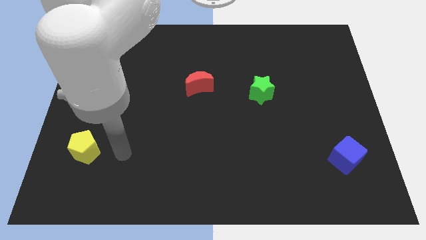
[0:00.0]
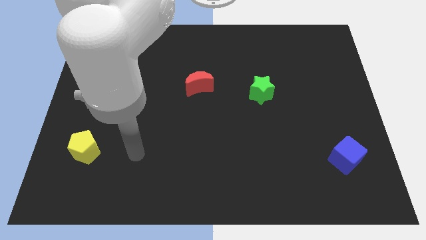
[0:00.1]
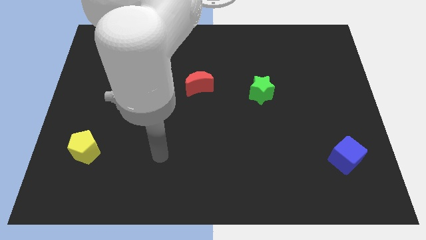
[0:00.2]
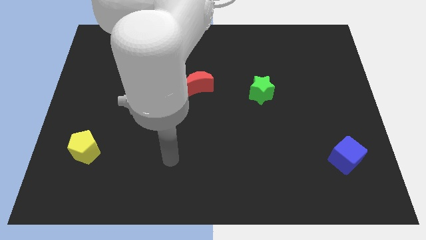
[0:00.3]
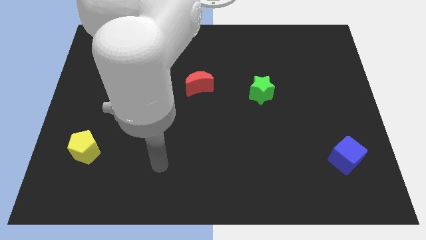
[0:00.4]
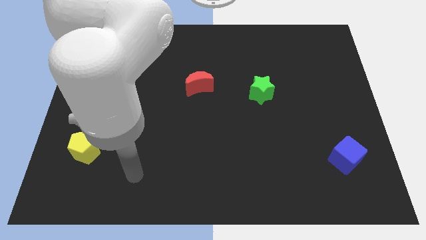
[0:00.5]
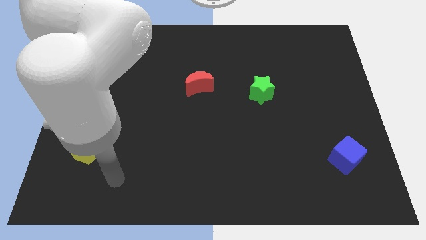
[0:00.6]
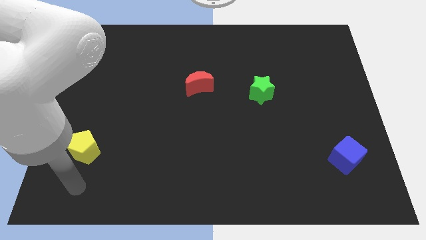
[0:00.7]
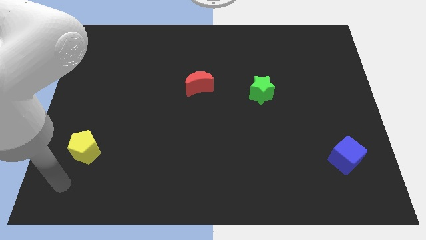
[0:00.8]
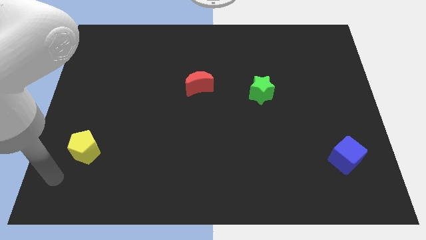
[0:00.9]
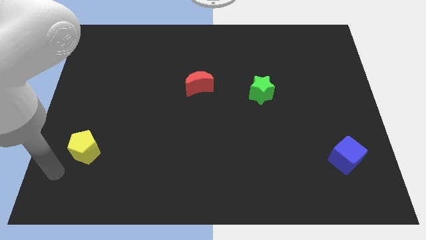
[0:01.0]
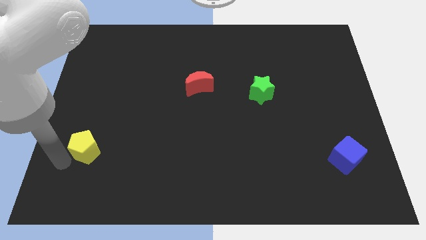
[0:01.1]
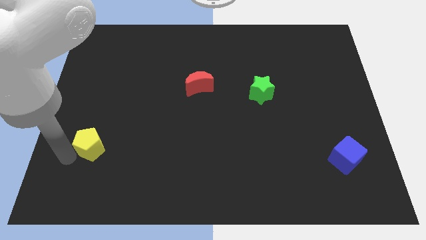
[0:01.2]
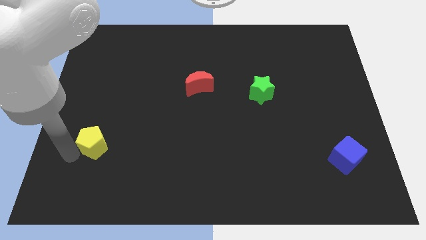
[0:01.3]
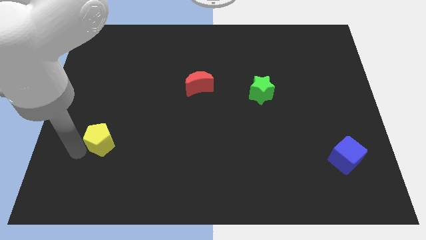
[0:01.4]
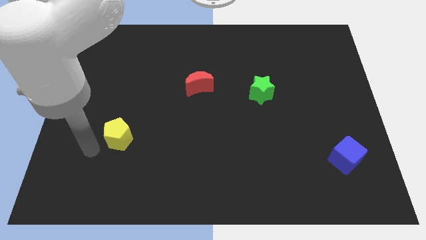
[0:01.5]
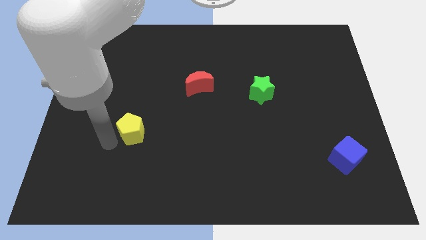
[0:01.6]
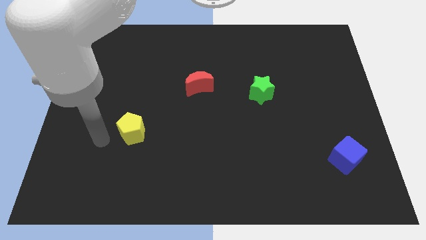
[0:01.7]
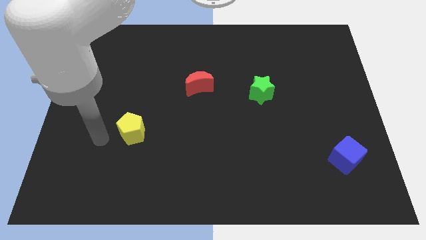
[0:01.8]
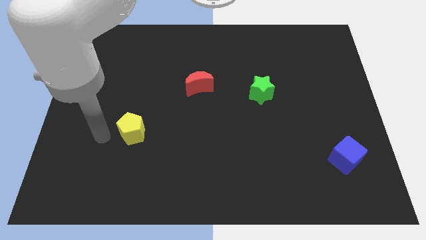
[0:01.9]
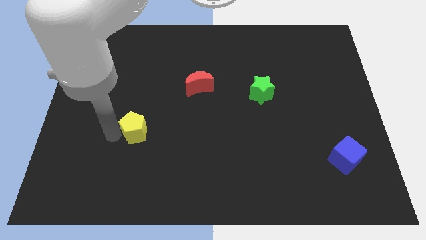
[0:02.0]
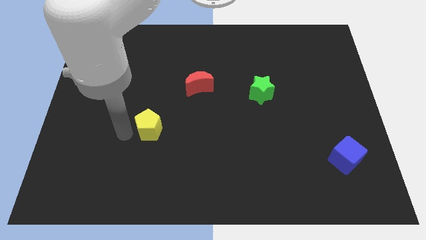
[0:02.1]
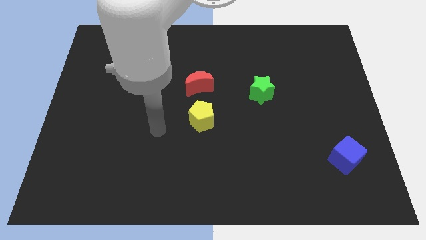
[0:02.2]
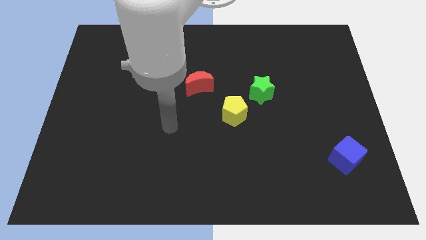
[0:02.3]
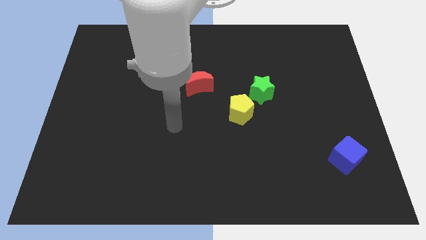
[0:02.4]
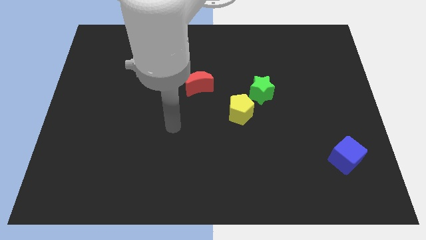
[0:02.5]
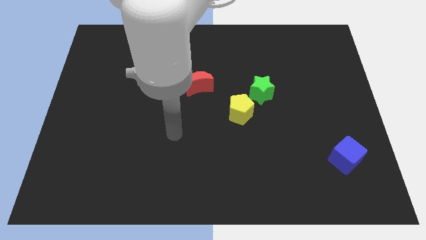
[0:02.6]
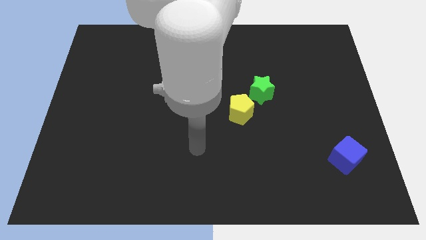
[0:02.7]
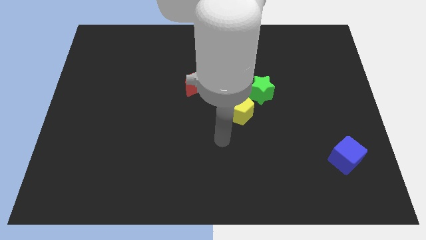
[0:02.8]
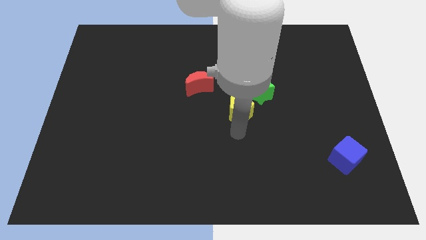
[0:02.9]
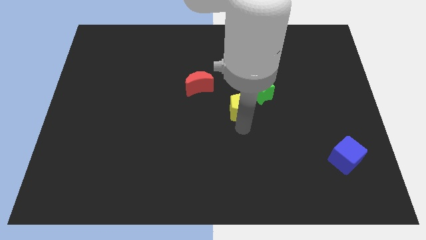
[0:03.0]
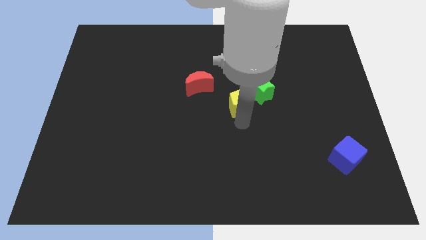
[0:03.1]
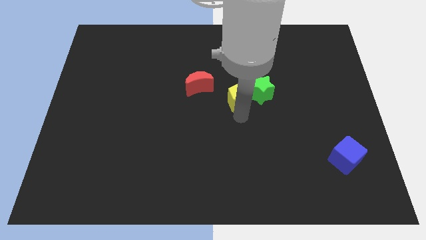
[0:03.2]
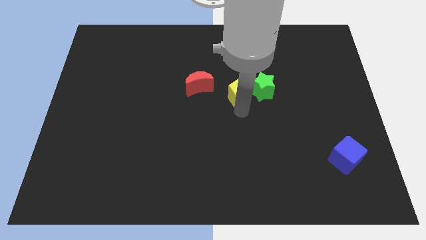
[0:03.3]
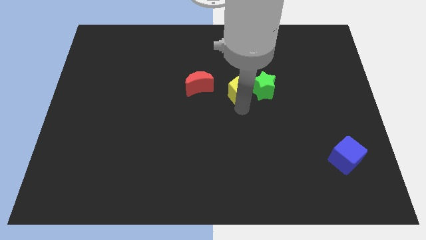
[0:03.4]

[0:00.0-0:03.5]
push the pentagon towards the green block

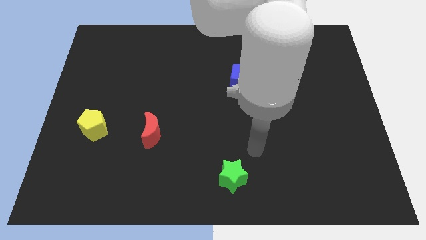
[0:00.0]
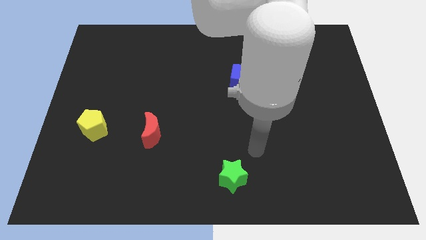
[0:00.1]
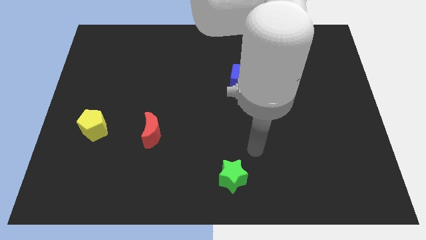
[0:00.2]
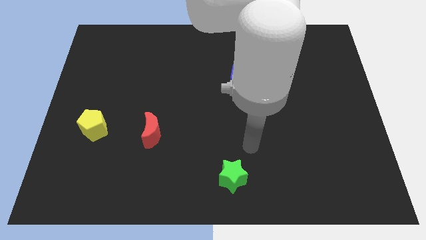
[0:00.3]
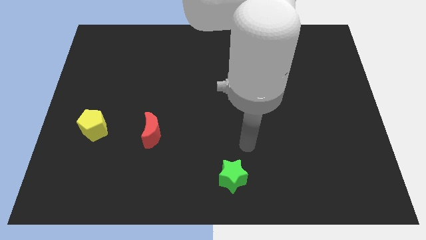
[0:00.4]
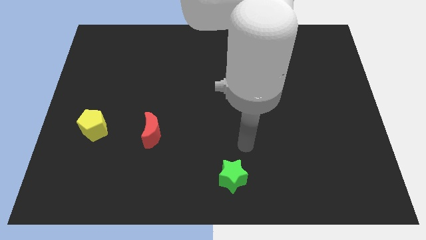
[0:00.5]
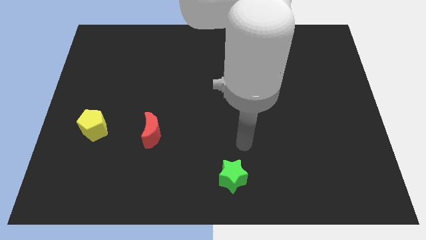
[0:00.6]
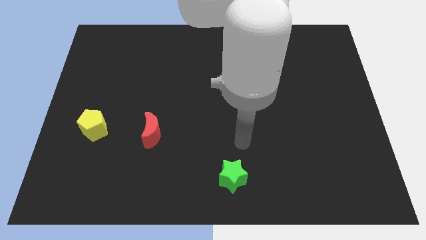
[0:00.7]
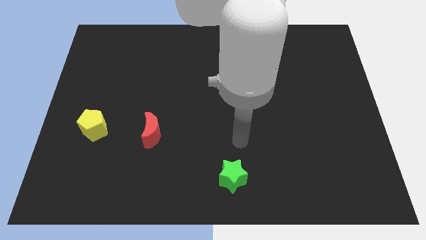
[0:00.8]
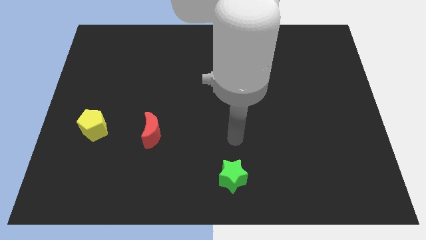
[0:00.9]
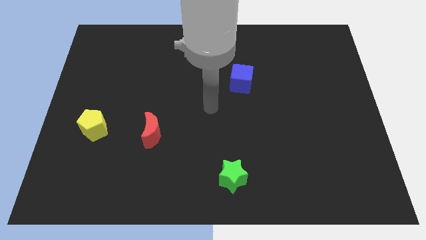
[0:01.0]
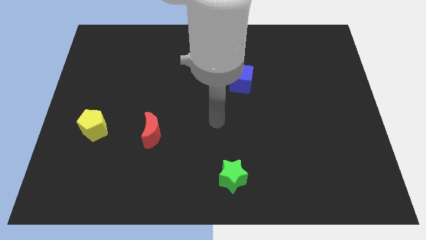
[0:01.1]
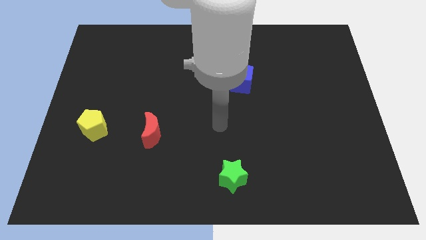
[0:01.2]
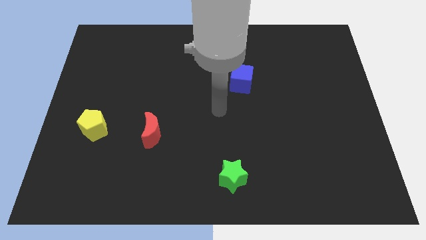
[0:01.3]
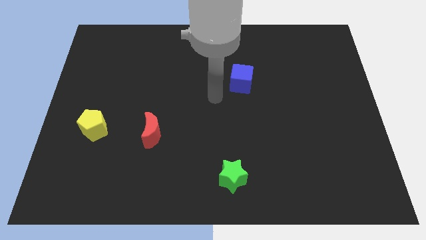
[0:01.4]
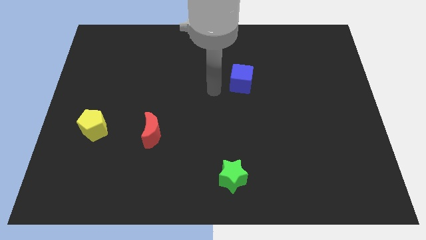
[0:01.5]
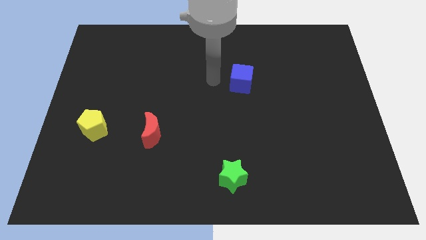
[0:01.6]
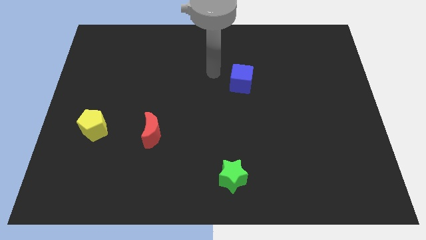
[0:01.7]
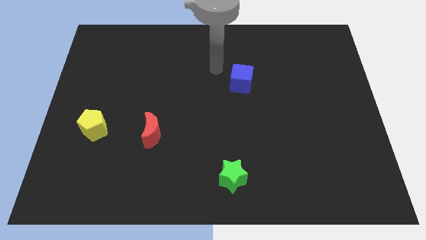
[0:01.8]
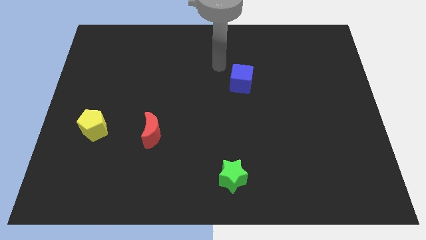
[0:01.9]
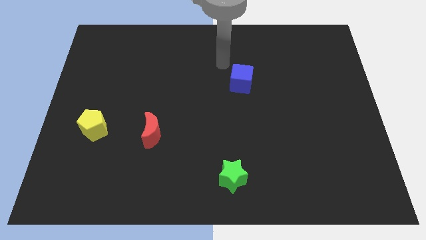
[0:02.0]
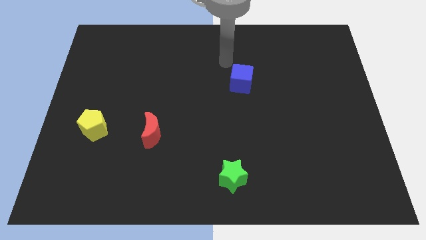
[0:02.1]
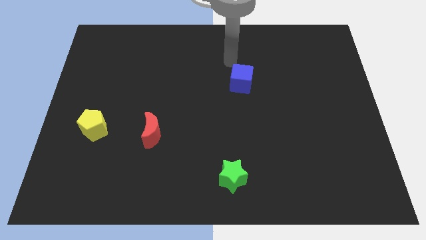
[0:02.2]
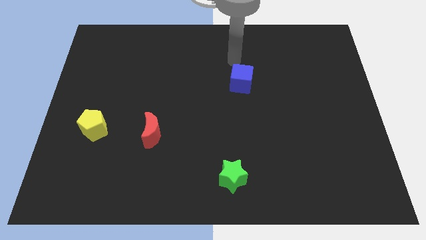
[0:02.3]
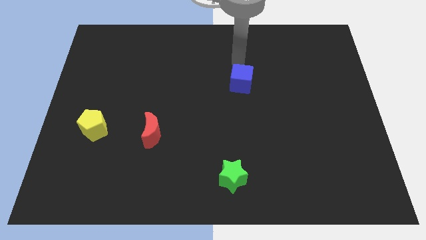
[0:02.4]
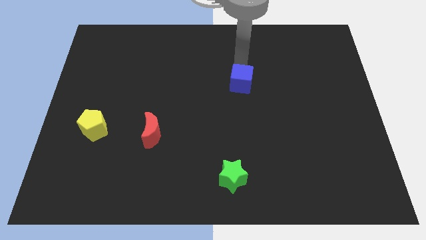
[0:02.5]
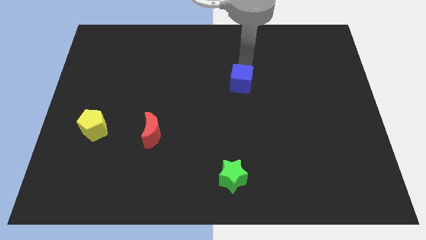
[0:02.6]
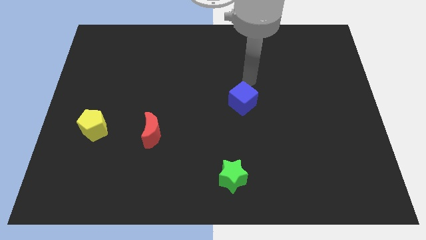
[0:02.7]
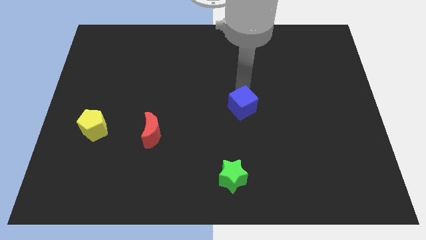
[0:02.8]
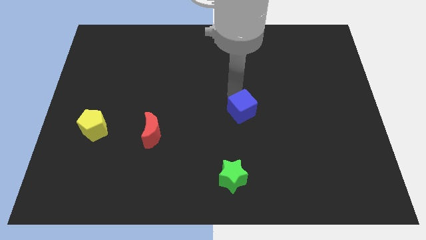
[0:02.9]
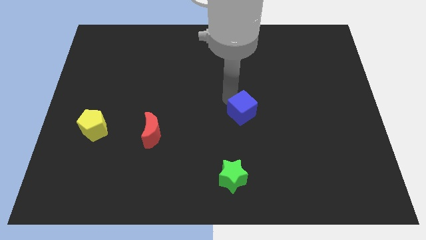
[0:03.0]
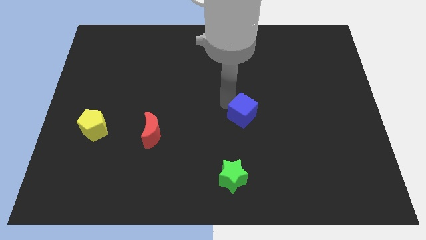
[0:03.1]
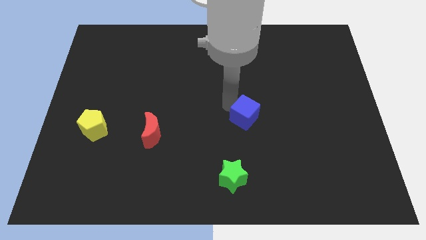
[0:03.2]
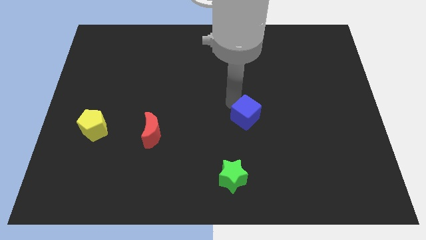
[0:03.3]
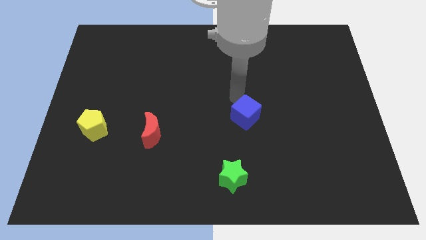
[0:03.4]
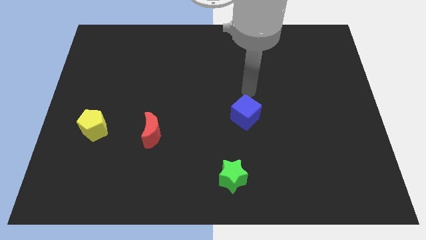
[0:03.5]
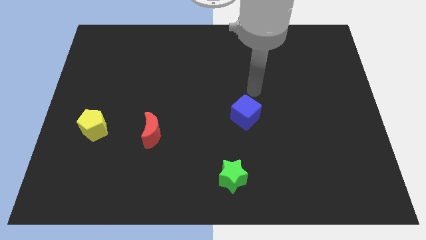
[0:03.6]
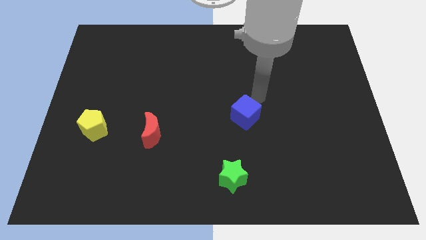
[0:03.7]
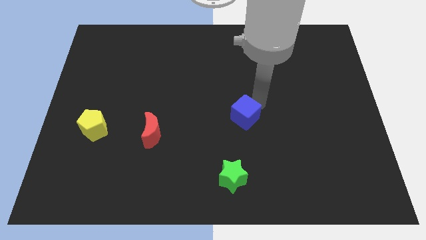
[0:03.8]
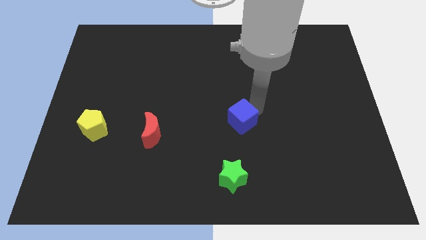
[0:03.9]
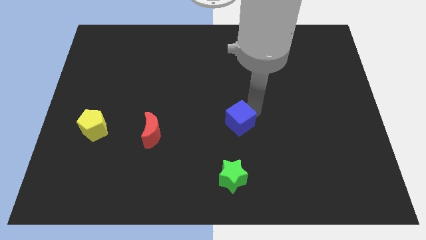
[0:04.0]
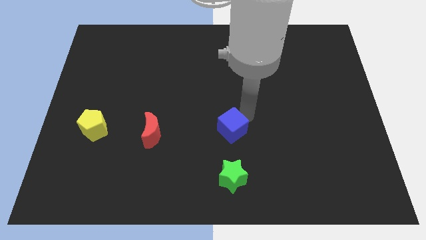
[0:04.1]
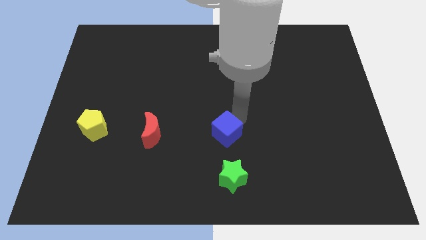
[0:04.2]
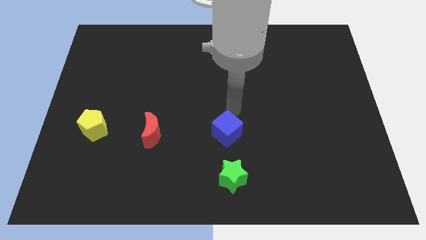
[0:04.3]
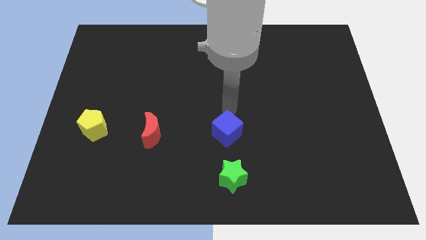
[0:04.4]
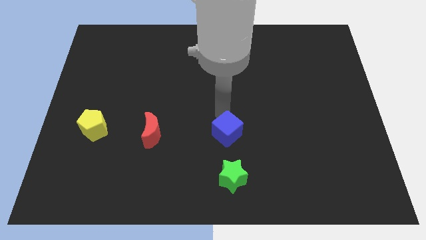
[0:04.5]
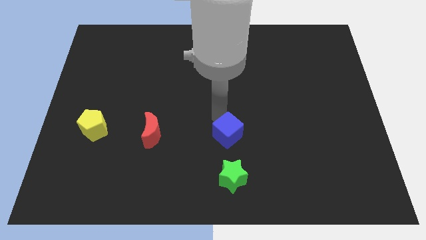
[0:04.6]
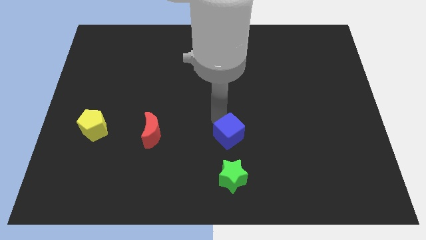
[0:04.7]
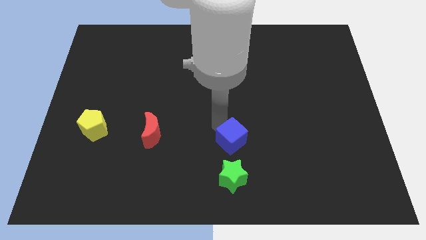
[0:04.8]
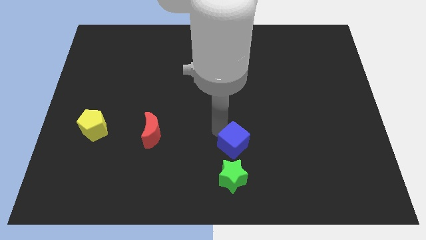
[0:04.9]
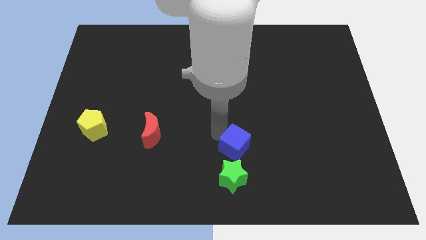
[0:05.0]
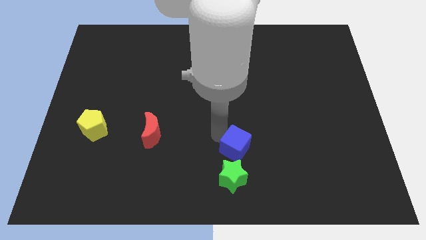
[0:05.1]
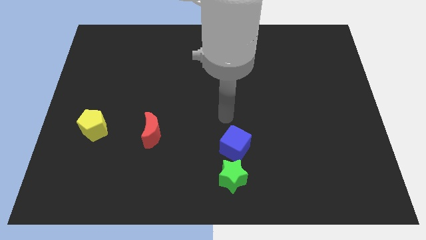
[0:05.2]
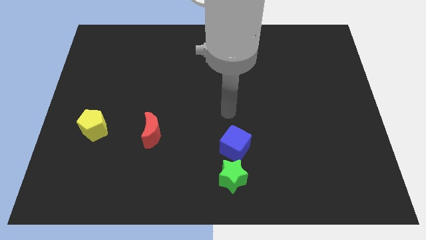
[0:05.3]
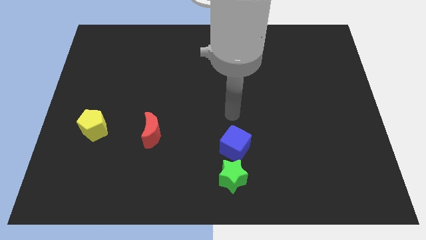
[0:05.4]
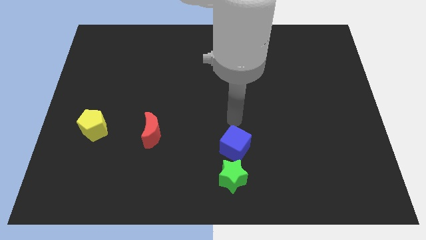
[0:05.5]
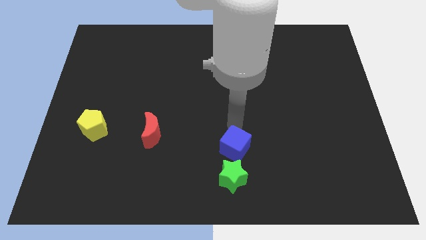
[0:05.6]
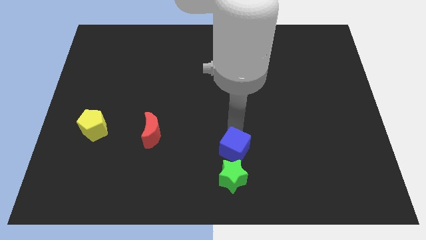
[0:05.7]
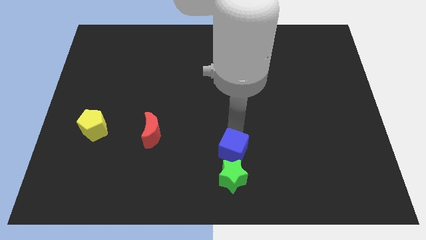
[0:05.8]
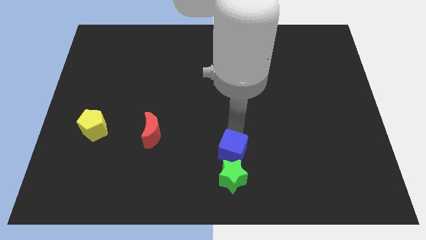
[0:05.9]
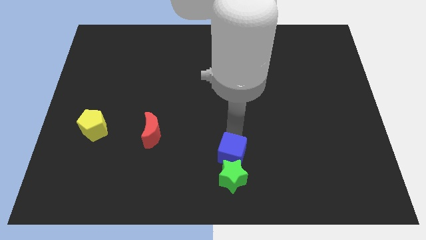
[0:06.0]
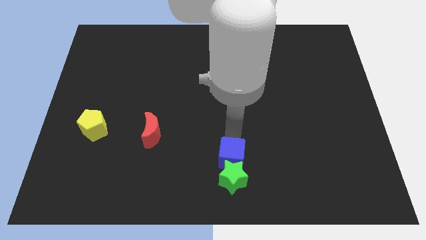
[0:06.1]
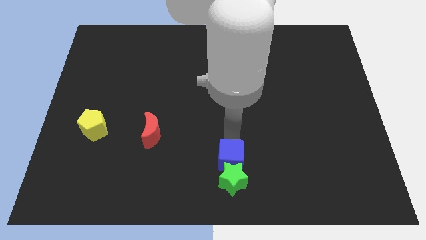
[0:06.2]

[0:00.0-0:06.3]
push the cube to the star
